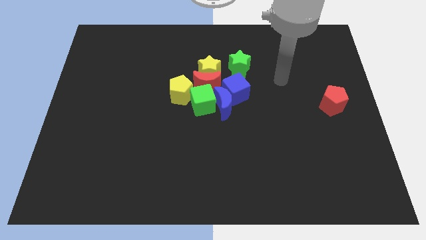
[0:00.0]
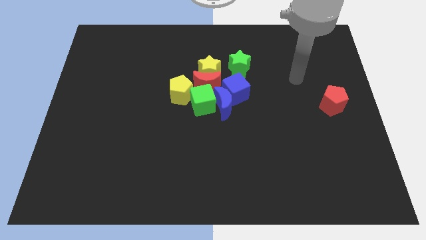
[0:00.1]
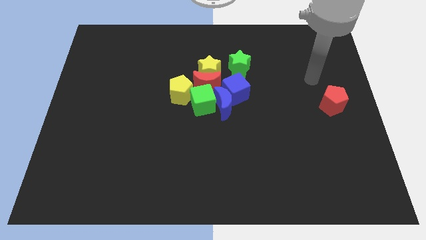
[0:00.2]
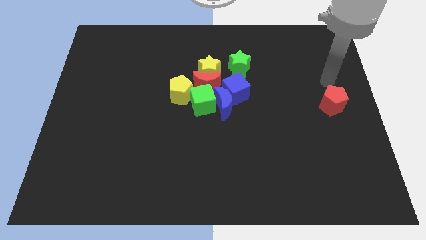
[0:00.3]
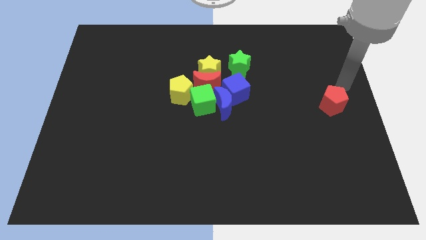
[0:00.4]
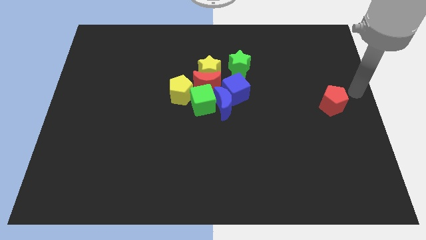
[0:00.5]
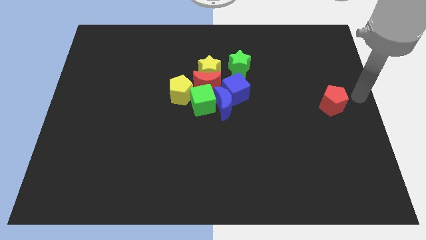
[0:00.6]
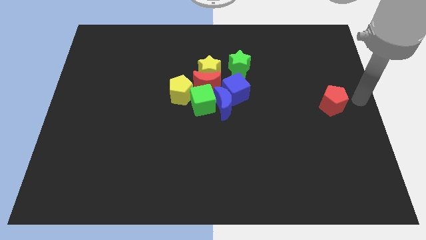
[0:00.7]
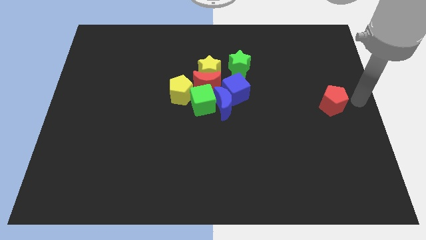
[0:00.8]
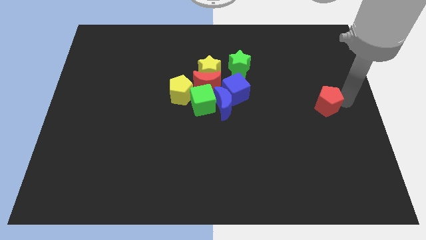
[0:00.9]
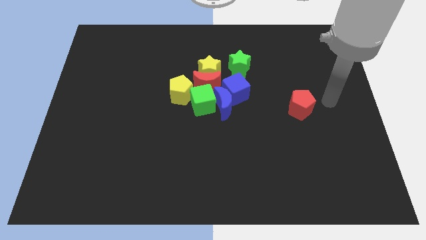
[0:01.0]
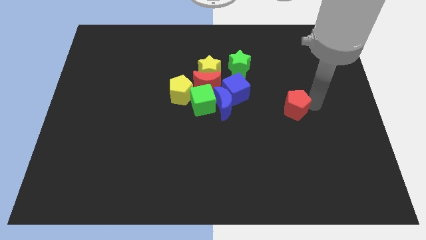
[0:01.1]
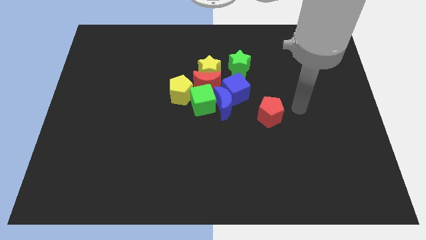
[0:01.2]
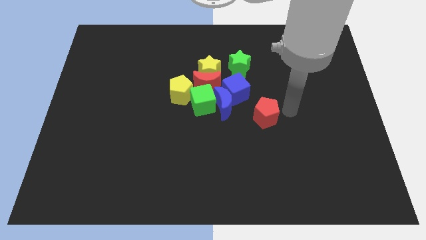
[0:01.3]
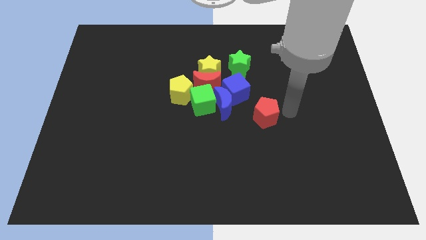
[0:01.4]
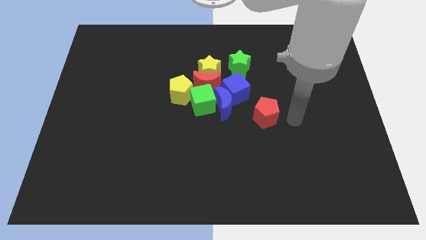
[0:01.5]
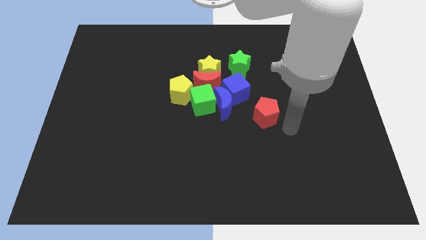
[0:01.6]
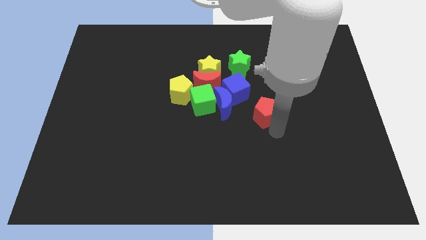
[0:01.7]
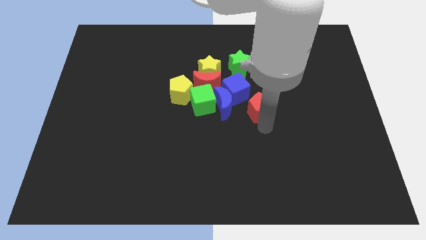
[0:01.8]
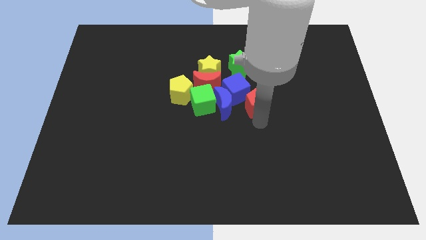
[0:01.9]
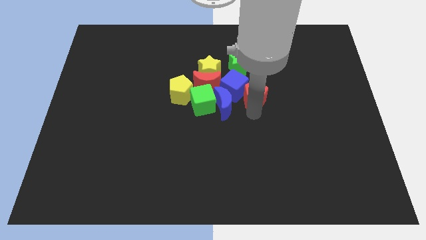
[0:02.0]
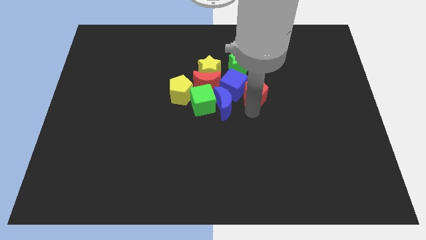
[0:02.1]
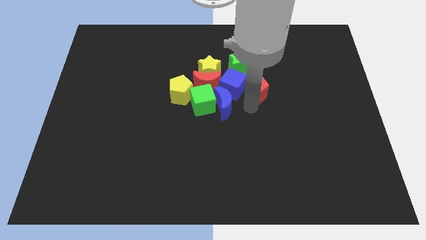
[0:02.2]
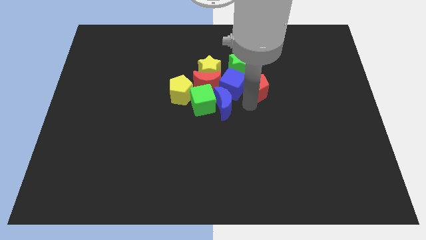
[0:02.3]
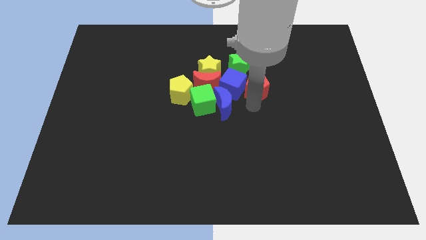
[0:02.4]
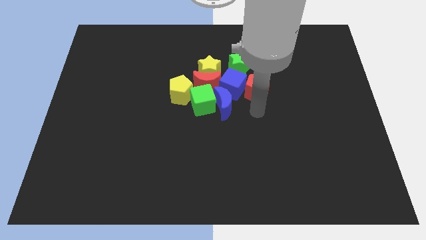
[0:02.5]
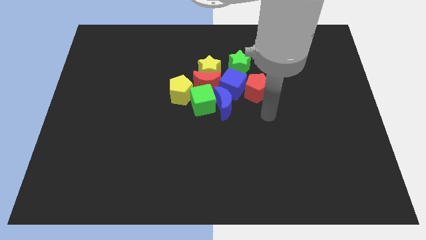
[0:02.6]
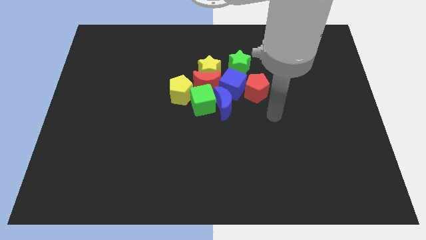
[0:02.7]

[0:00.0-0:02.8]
place red pentagon beside blue cube

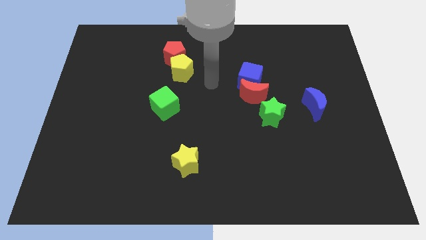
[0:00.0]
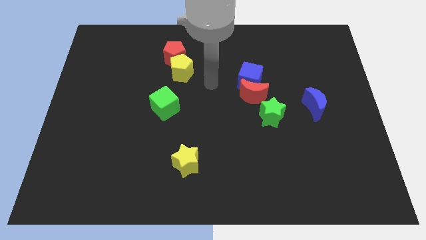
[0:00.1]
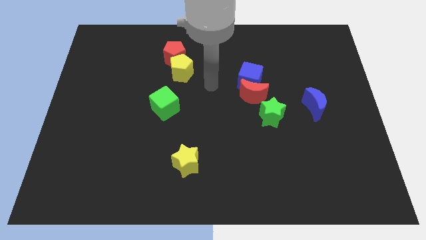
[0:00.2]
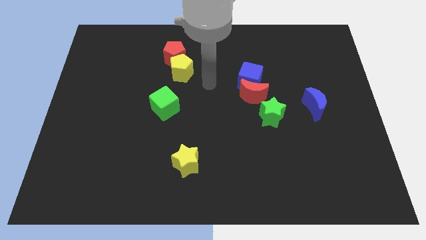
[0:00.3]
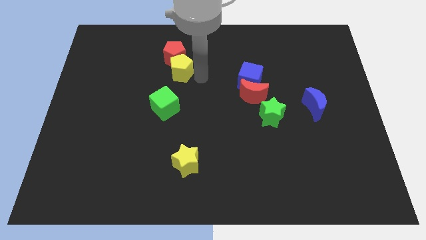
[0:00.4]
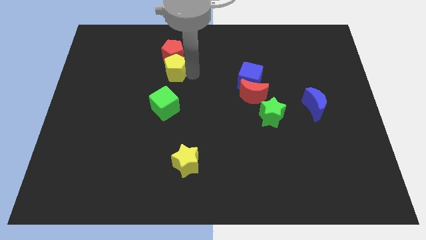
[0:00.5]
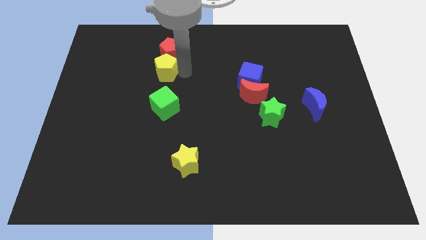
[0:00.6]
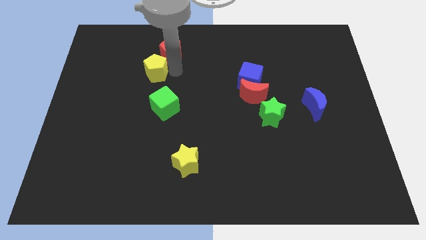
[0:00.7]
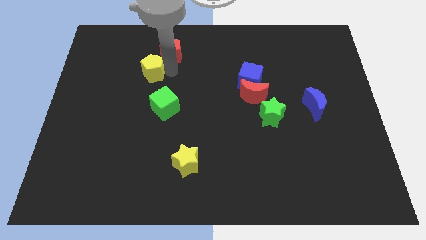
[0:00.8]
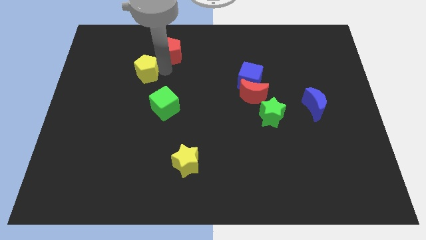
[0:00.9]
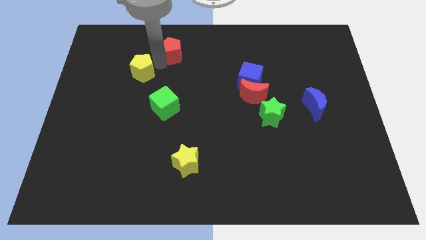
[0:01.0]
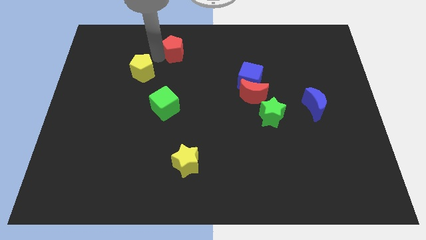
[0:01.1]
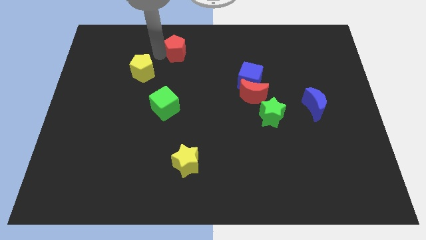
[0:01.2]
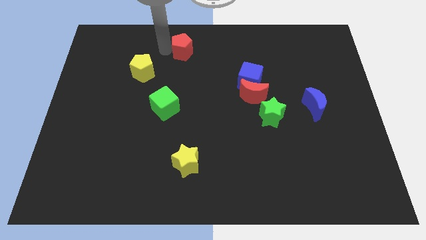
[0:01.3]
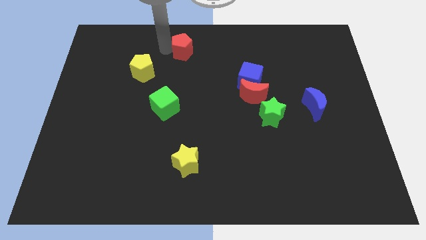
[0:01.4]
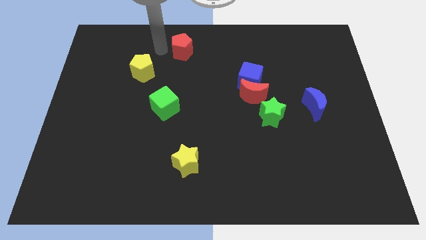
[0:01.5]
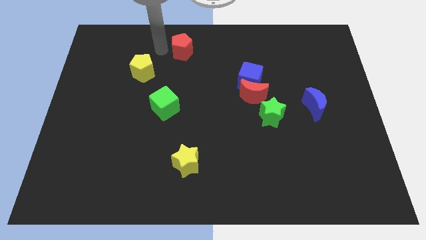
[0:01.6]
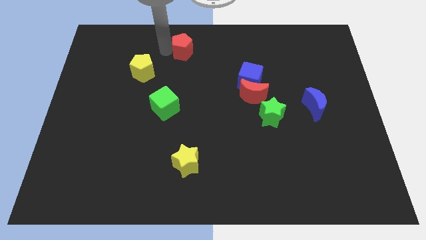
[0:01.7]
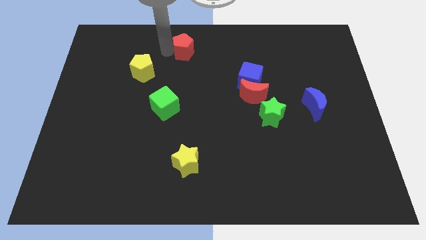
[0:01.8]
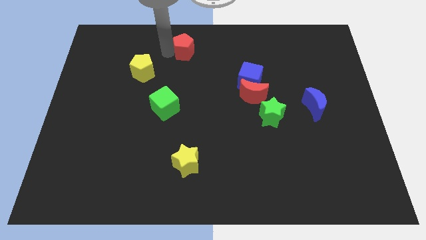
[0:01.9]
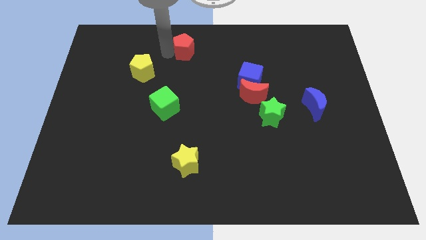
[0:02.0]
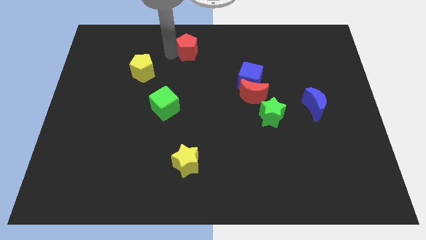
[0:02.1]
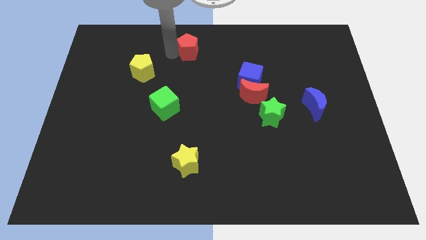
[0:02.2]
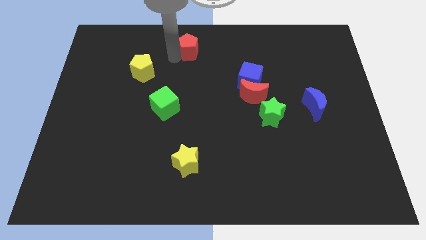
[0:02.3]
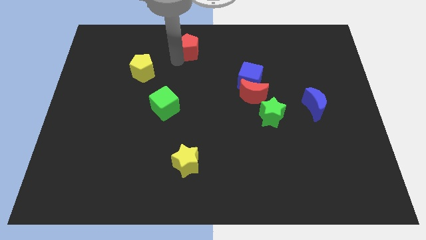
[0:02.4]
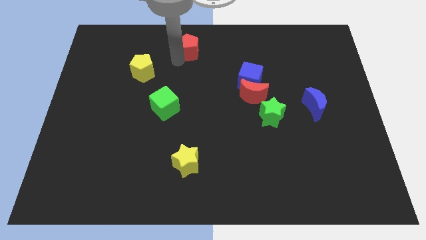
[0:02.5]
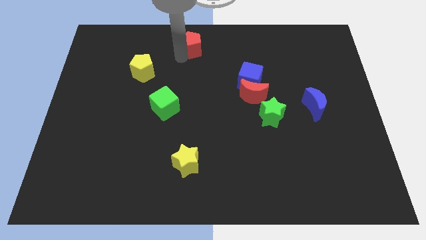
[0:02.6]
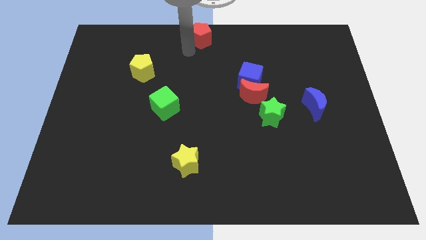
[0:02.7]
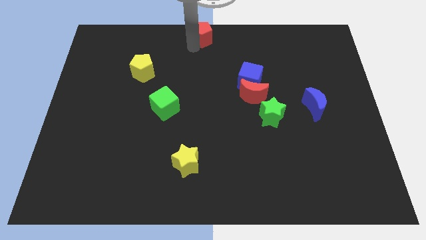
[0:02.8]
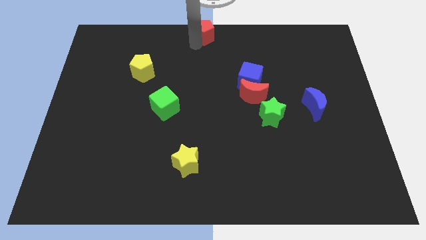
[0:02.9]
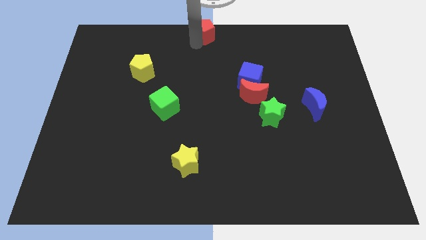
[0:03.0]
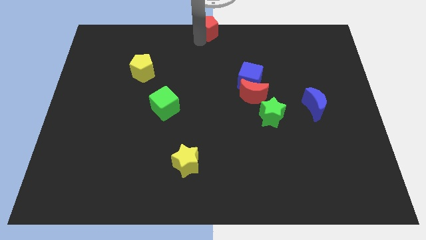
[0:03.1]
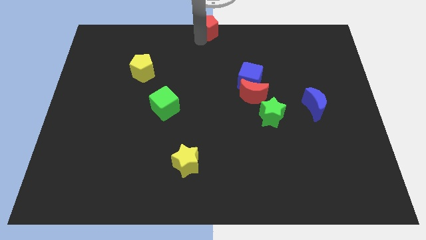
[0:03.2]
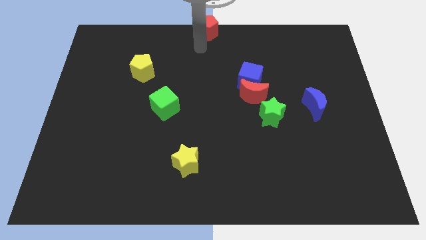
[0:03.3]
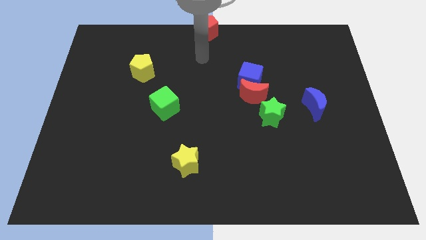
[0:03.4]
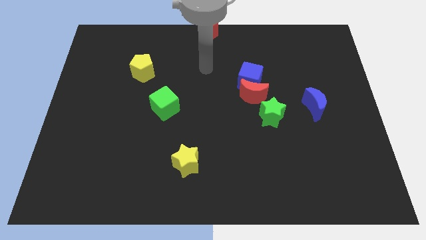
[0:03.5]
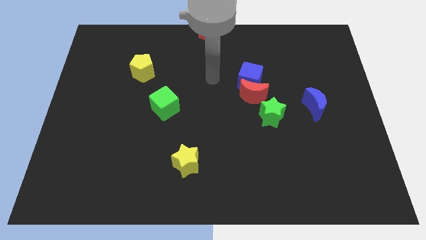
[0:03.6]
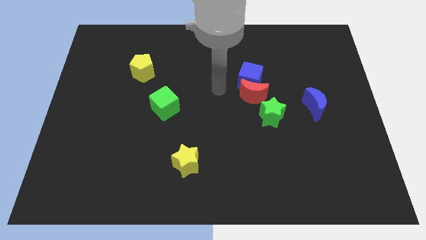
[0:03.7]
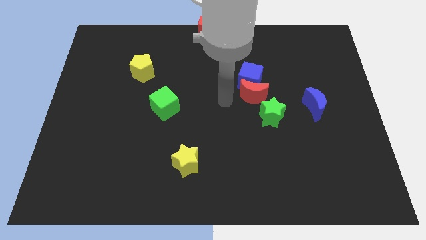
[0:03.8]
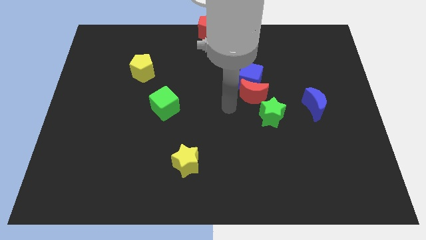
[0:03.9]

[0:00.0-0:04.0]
separate the yellow pentagon and red pentagon

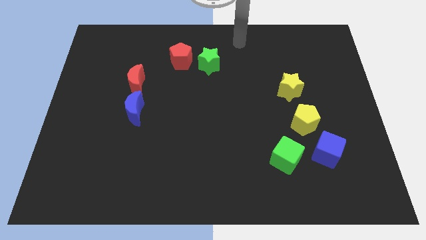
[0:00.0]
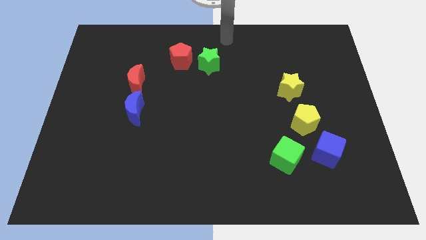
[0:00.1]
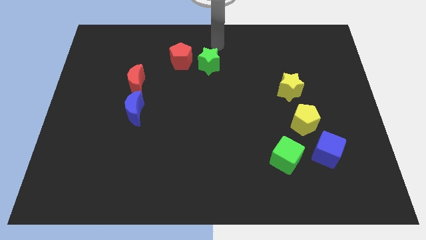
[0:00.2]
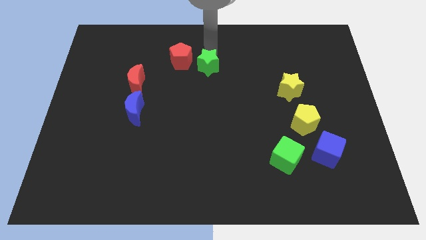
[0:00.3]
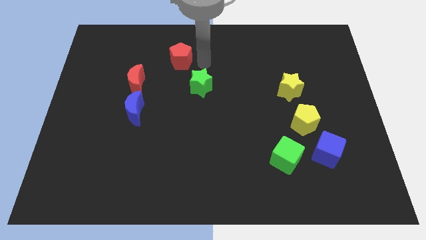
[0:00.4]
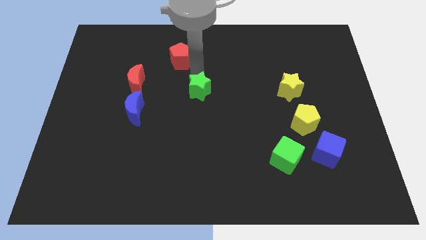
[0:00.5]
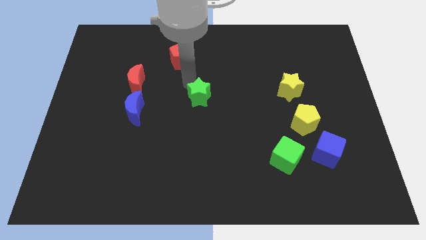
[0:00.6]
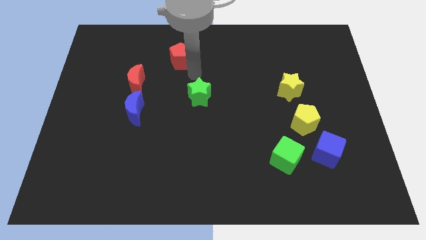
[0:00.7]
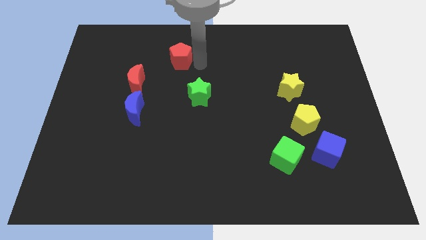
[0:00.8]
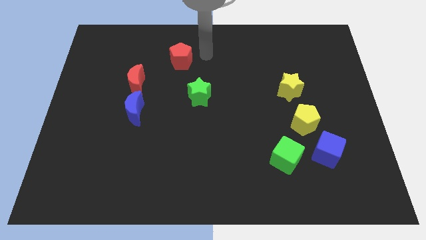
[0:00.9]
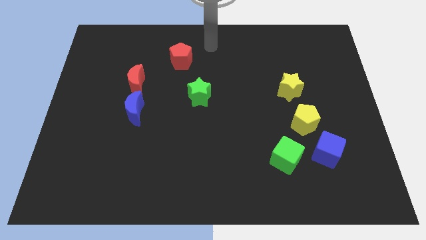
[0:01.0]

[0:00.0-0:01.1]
push green star towards center

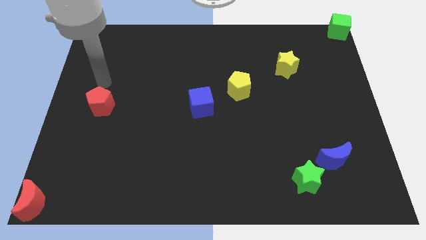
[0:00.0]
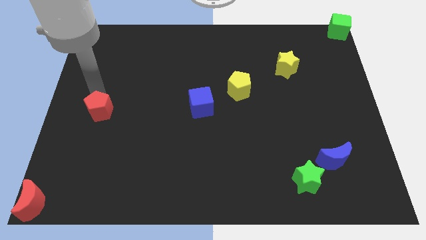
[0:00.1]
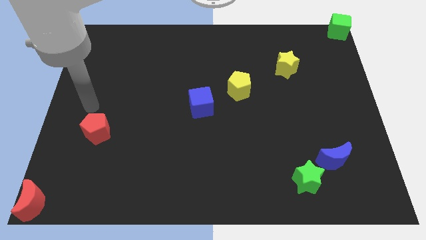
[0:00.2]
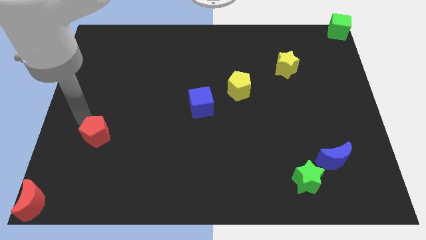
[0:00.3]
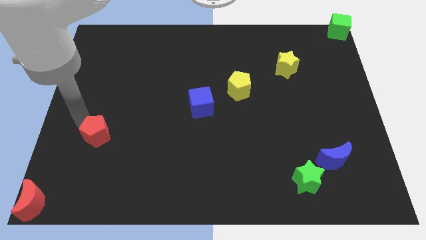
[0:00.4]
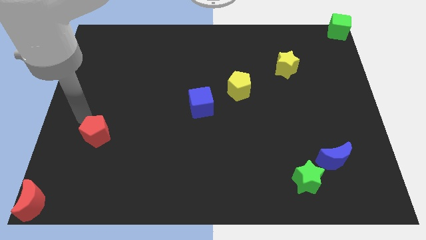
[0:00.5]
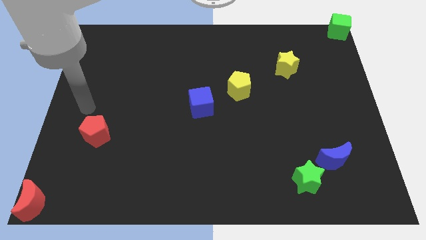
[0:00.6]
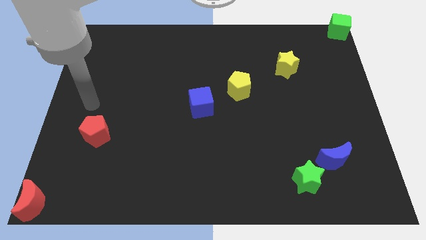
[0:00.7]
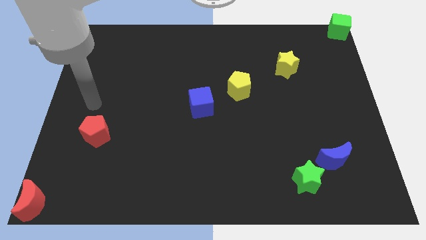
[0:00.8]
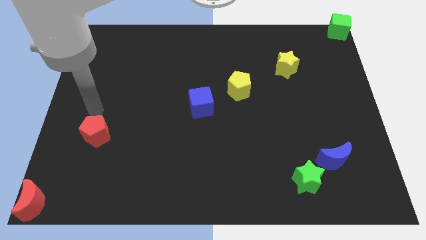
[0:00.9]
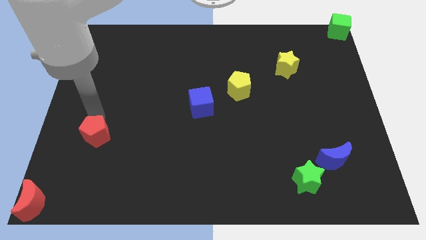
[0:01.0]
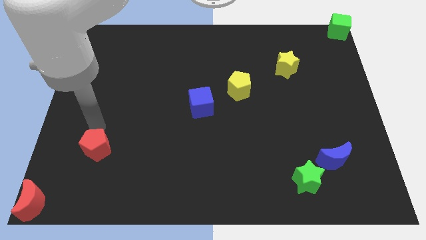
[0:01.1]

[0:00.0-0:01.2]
move the red pentagon towards the bottom left side of the board
